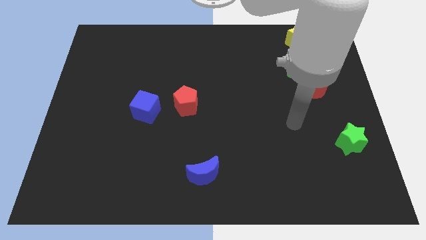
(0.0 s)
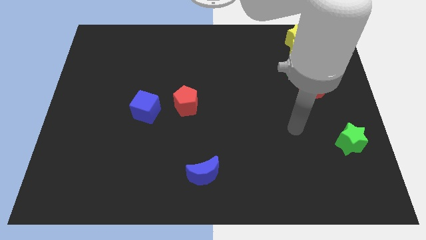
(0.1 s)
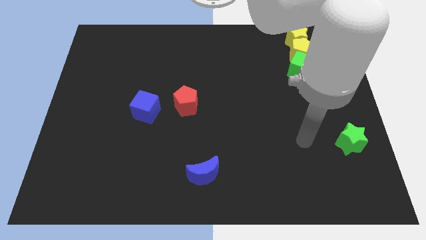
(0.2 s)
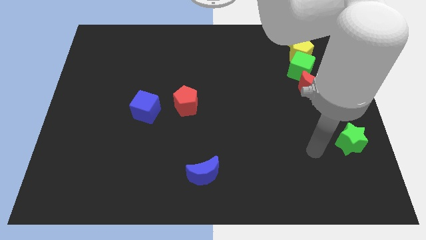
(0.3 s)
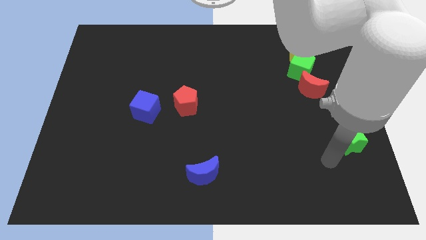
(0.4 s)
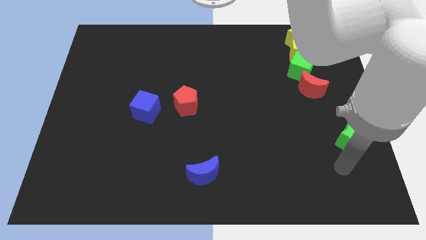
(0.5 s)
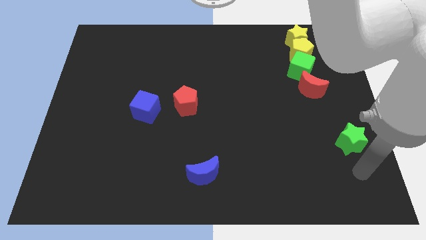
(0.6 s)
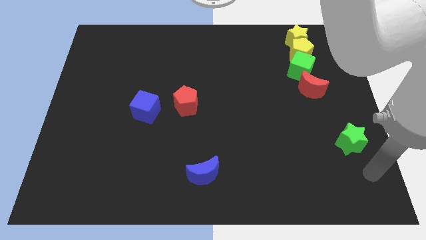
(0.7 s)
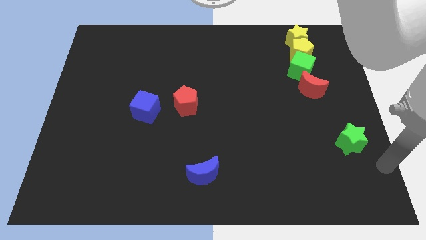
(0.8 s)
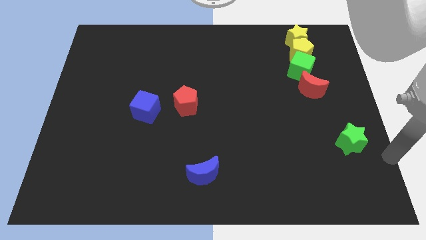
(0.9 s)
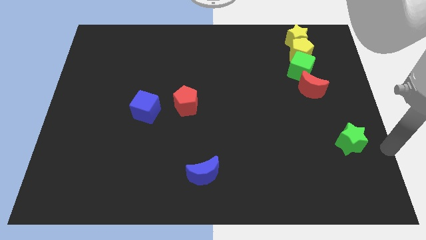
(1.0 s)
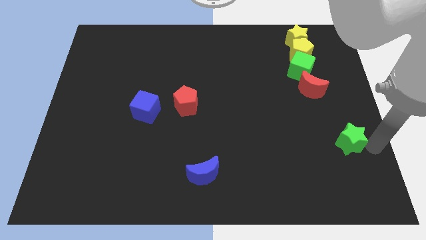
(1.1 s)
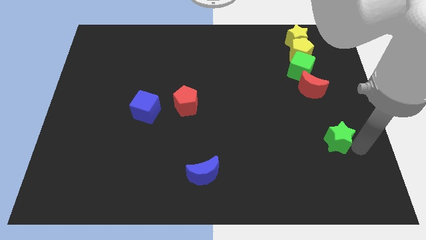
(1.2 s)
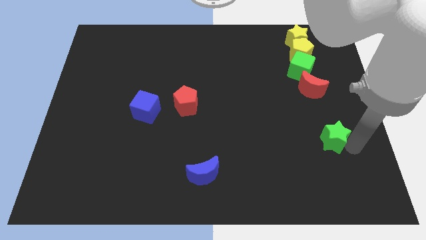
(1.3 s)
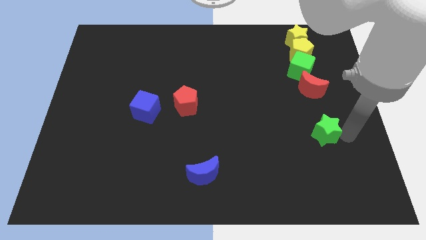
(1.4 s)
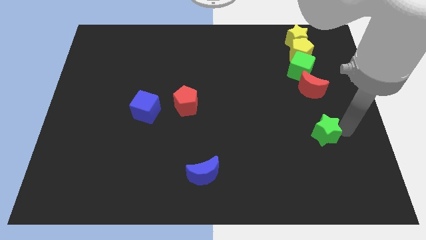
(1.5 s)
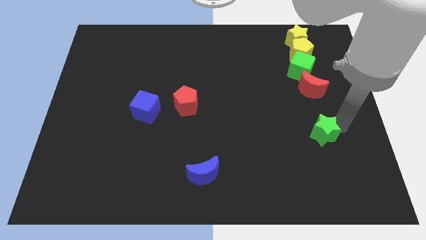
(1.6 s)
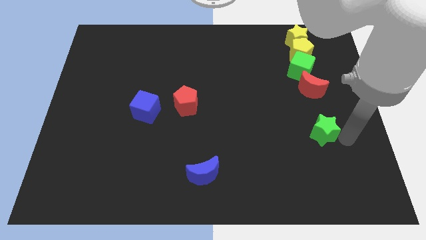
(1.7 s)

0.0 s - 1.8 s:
place the green star vertically below the red moon

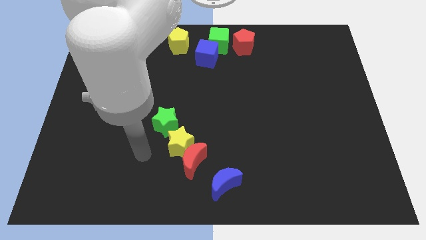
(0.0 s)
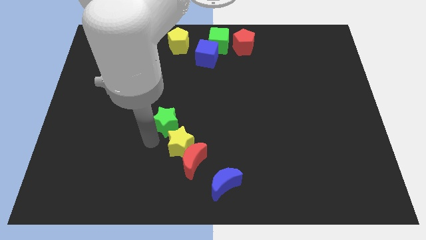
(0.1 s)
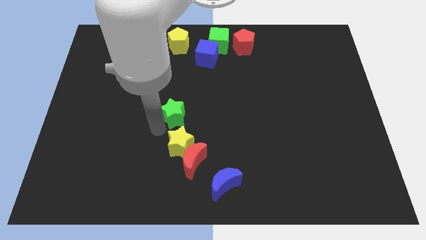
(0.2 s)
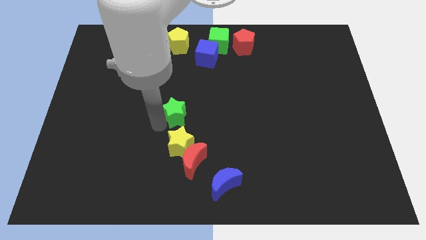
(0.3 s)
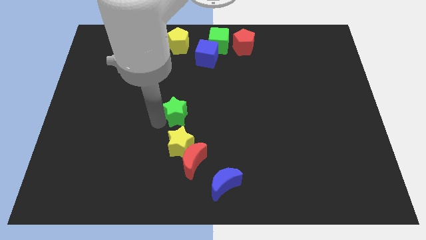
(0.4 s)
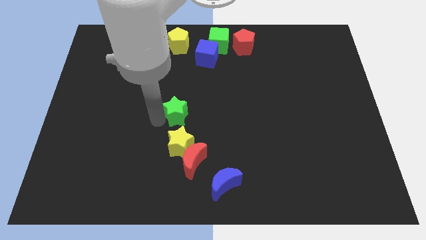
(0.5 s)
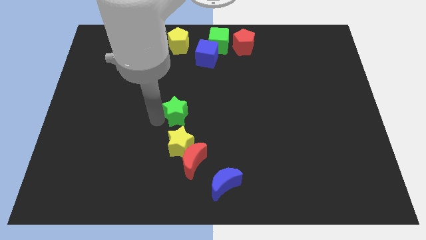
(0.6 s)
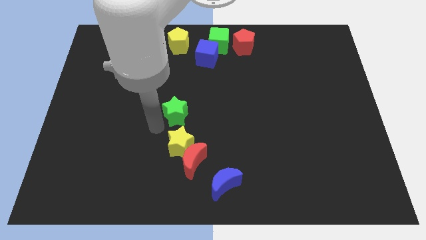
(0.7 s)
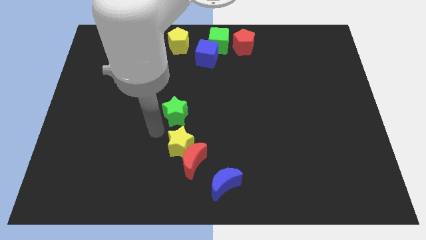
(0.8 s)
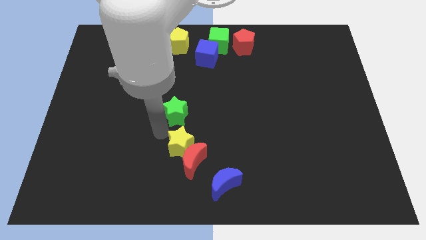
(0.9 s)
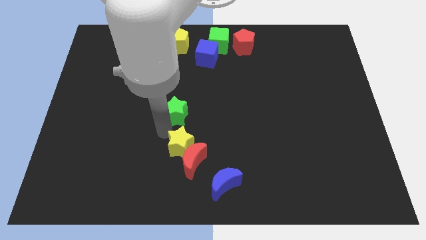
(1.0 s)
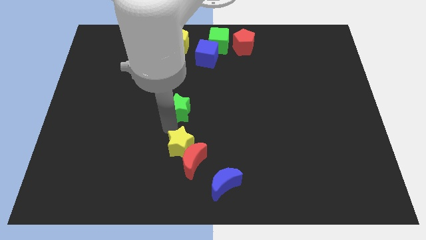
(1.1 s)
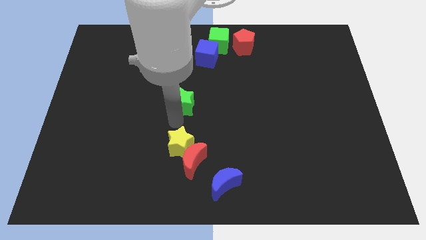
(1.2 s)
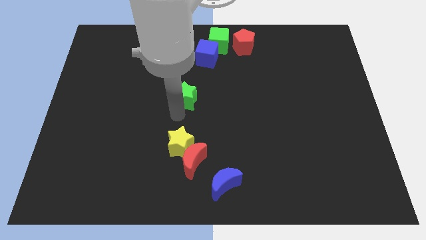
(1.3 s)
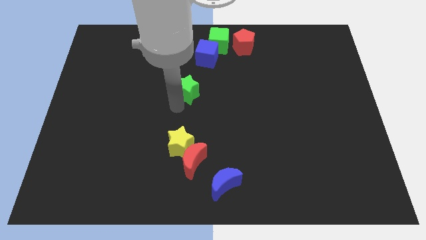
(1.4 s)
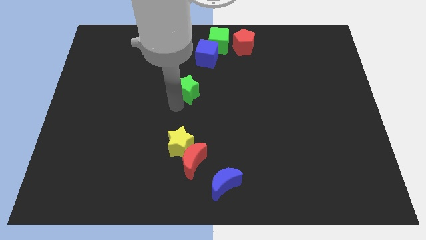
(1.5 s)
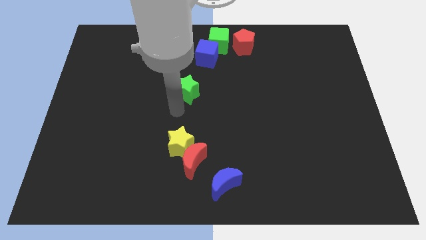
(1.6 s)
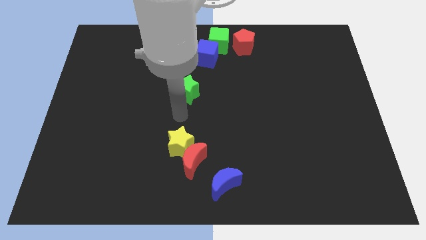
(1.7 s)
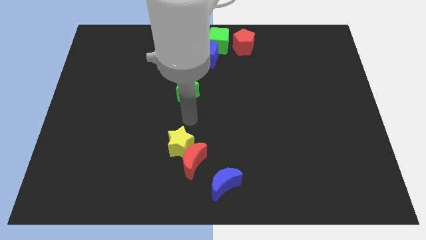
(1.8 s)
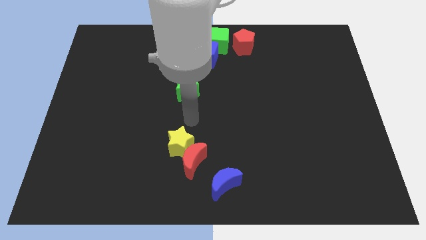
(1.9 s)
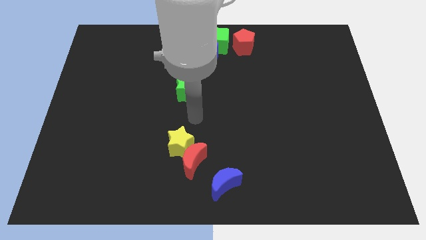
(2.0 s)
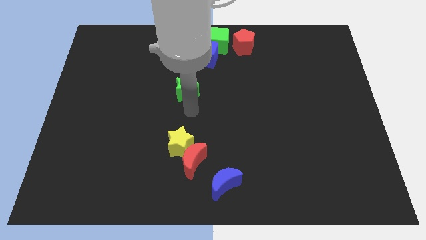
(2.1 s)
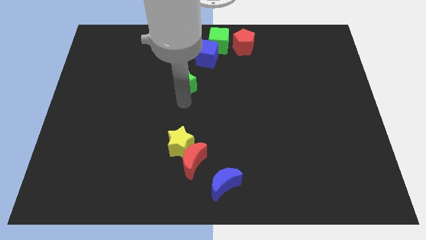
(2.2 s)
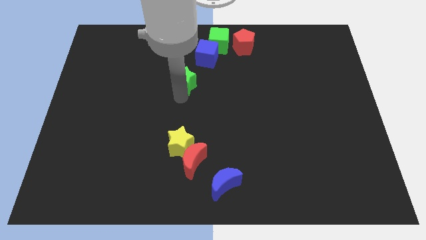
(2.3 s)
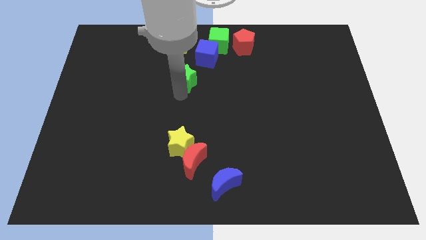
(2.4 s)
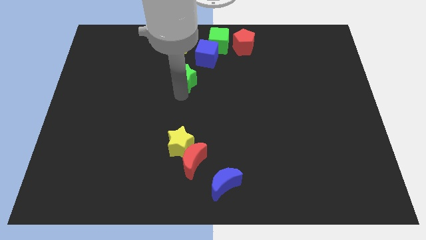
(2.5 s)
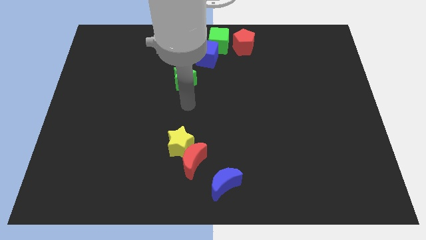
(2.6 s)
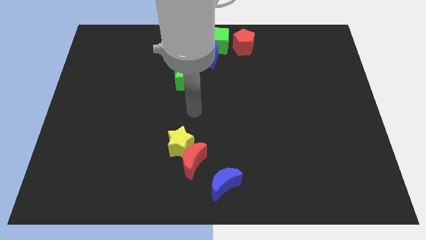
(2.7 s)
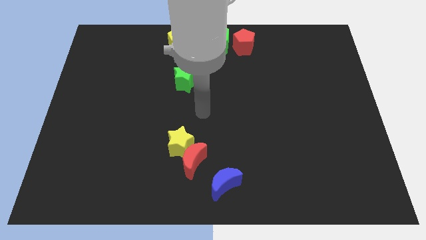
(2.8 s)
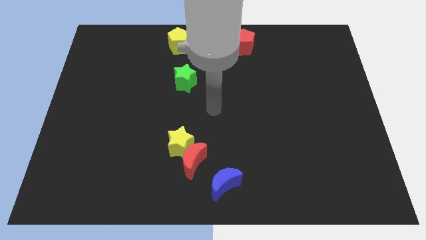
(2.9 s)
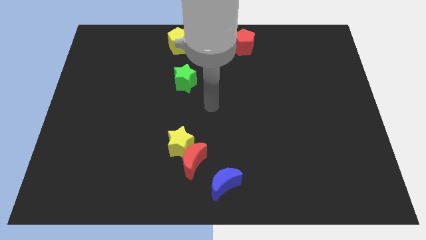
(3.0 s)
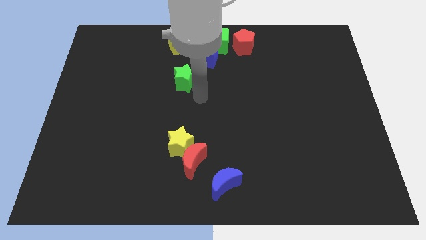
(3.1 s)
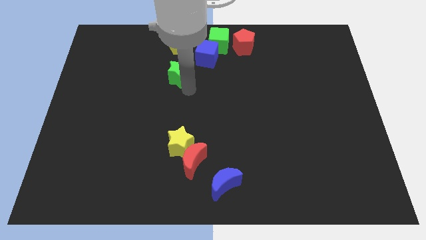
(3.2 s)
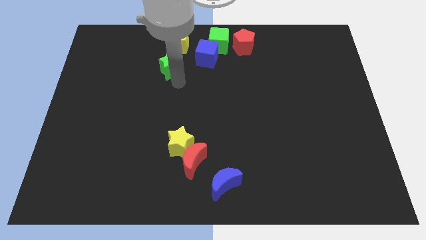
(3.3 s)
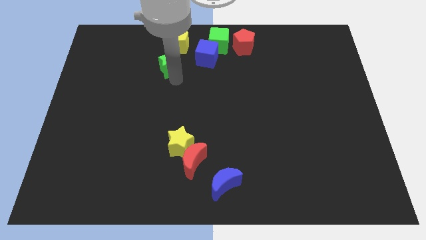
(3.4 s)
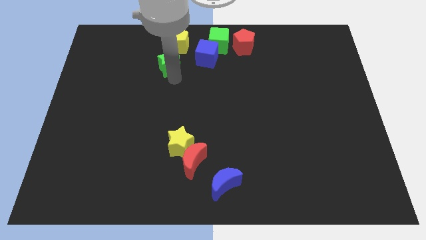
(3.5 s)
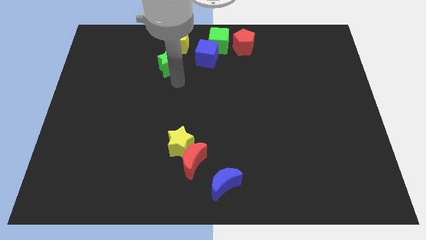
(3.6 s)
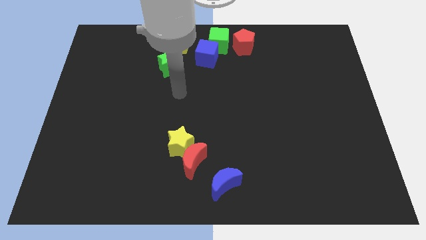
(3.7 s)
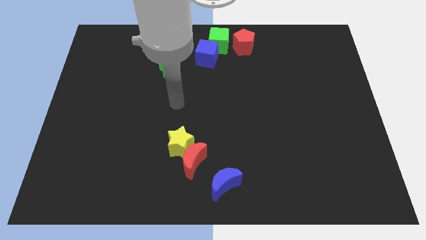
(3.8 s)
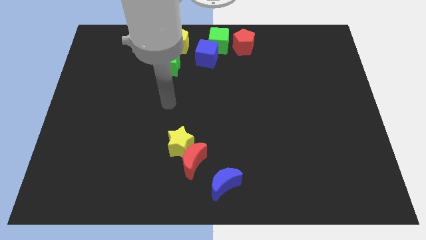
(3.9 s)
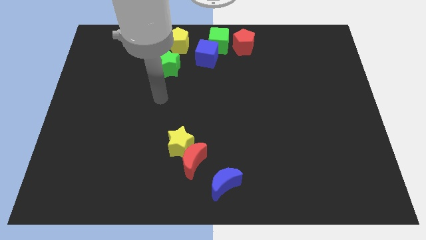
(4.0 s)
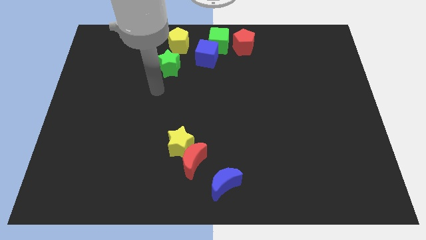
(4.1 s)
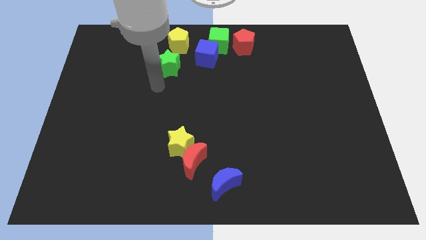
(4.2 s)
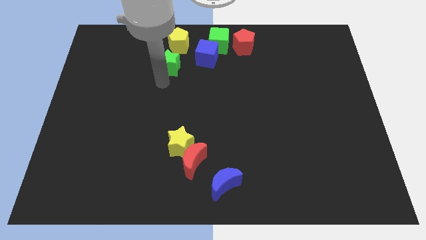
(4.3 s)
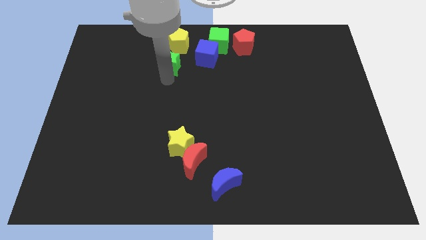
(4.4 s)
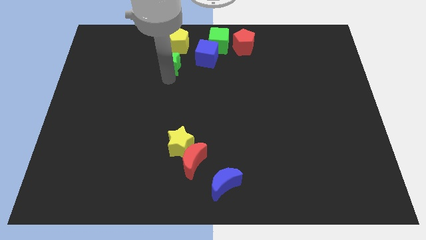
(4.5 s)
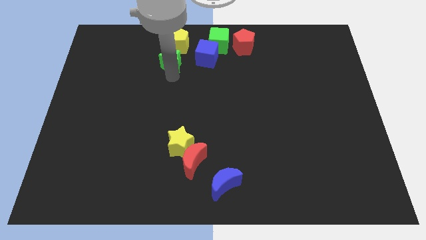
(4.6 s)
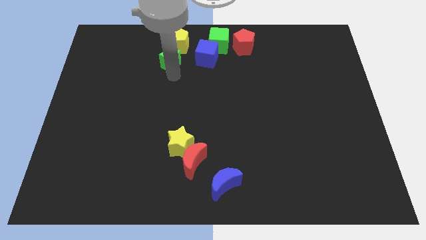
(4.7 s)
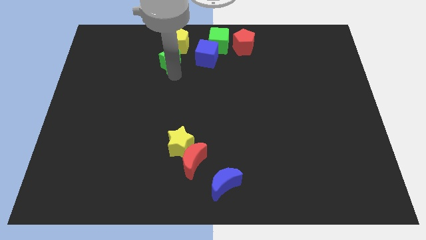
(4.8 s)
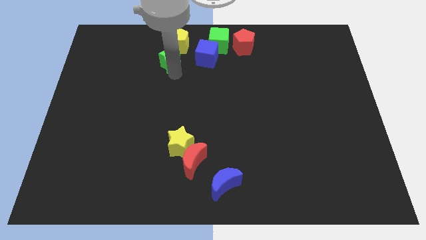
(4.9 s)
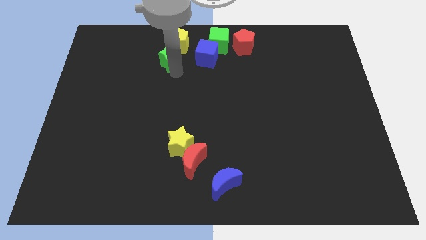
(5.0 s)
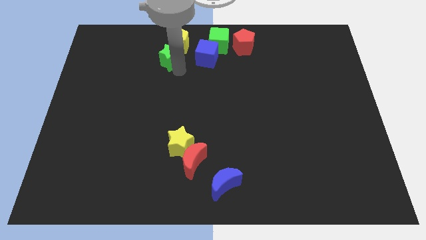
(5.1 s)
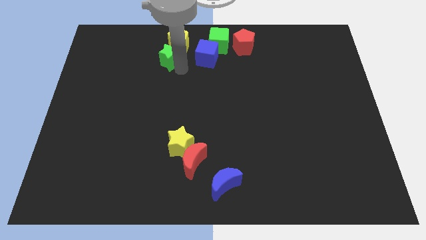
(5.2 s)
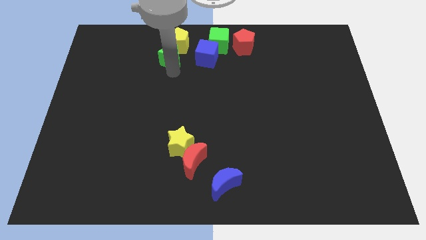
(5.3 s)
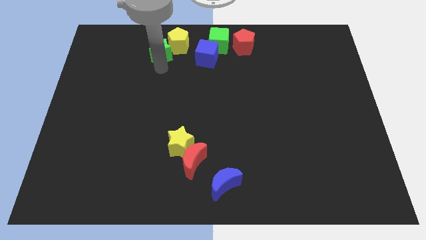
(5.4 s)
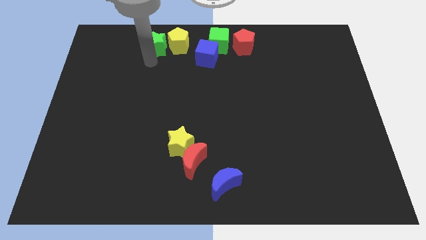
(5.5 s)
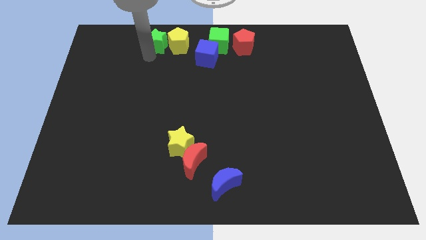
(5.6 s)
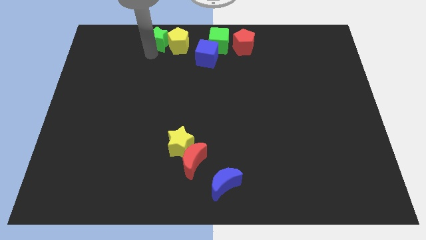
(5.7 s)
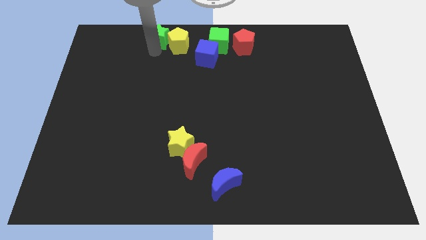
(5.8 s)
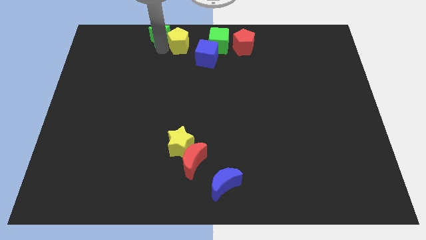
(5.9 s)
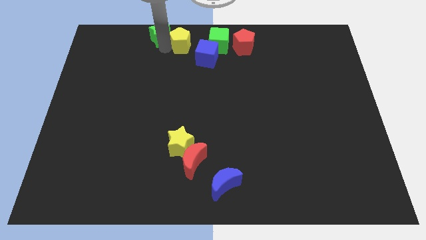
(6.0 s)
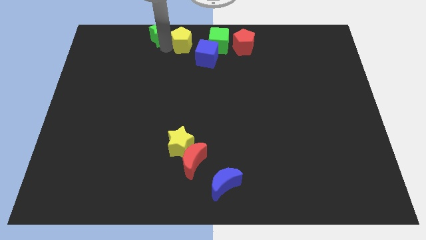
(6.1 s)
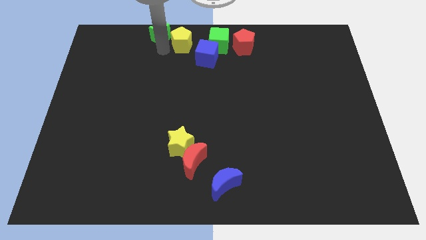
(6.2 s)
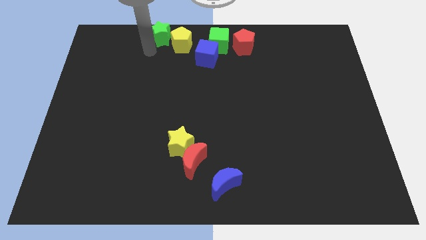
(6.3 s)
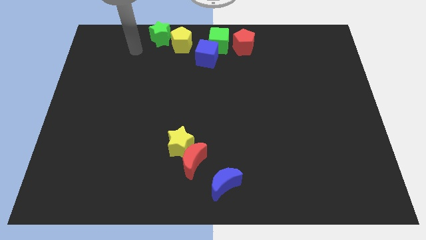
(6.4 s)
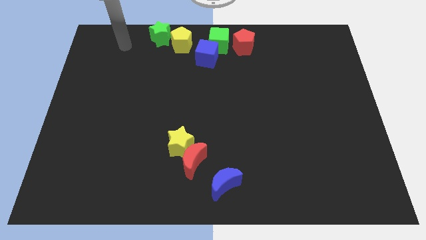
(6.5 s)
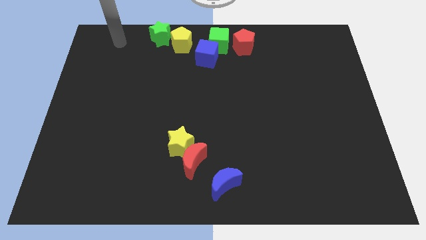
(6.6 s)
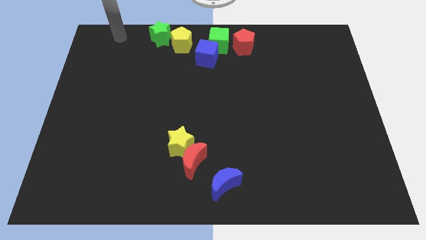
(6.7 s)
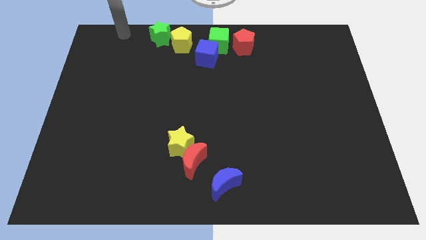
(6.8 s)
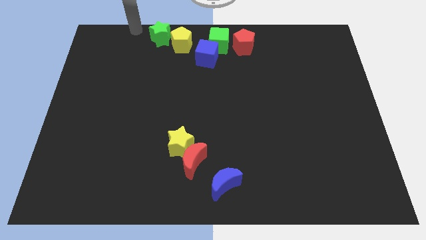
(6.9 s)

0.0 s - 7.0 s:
place the green star to the left of yellow pentagon

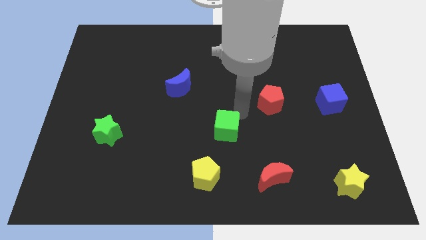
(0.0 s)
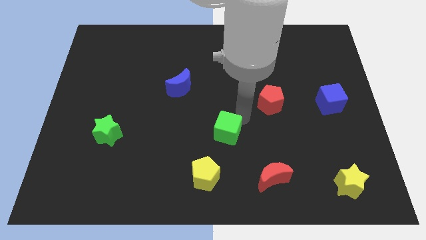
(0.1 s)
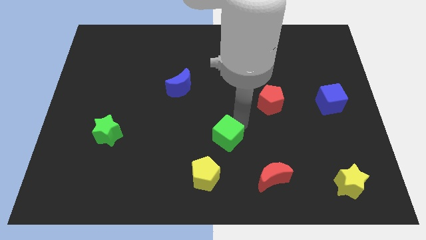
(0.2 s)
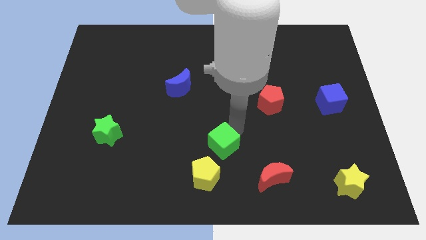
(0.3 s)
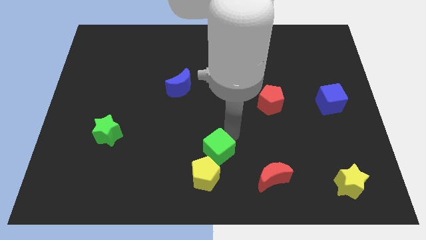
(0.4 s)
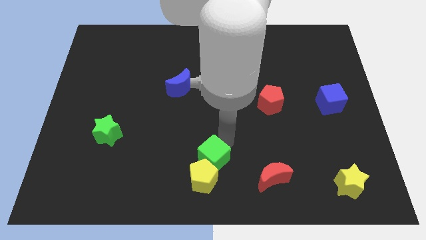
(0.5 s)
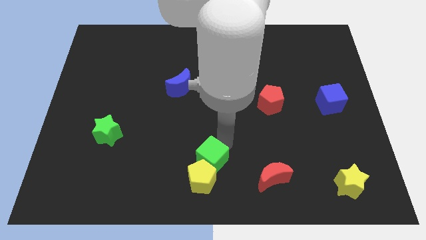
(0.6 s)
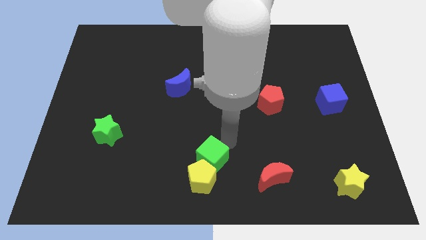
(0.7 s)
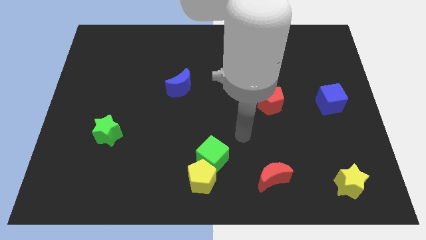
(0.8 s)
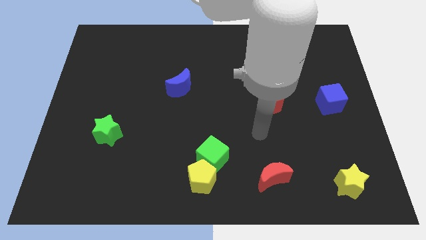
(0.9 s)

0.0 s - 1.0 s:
push green block into yellow pentagon
